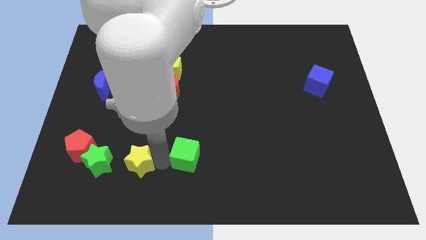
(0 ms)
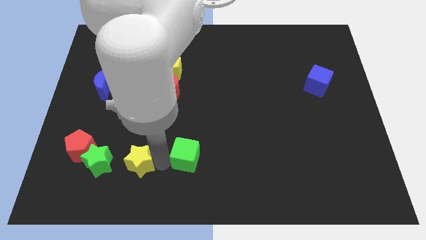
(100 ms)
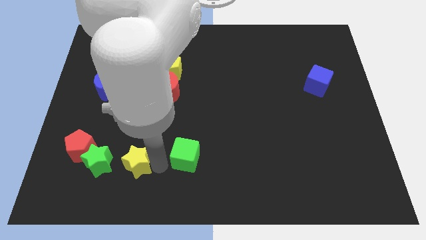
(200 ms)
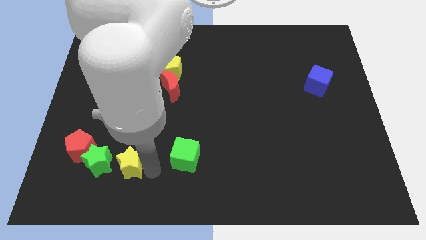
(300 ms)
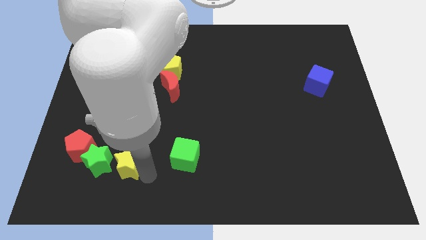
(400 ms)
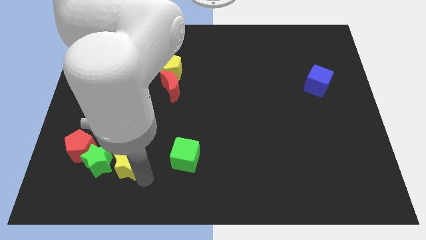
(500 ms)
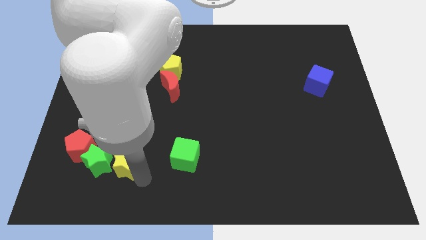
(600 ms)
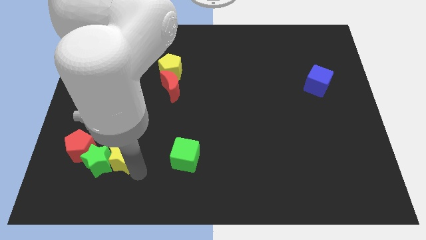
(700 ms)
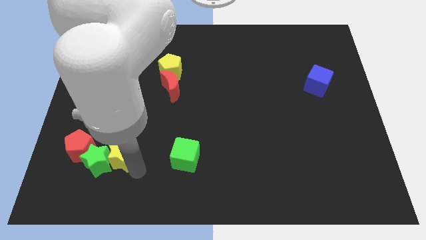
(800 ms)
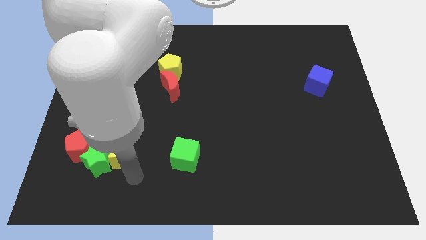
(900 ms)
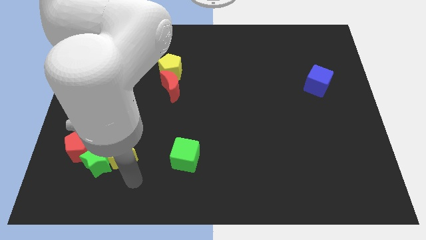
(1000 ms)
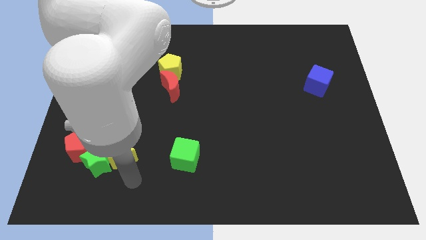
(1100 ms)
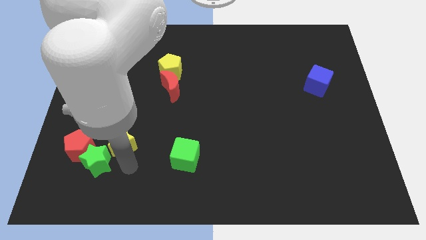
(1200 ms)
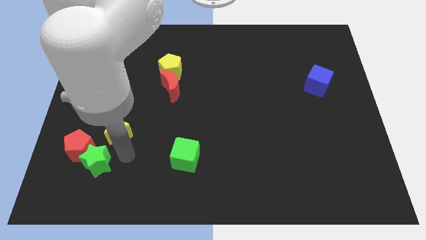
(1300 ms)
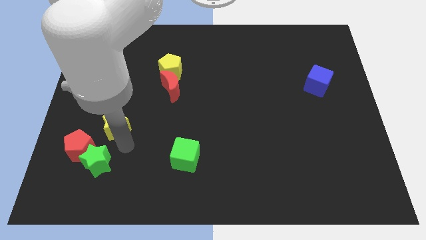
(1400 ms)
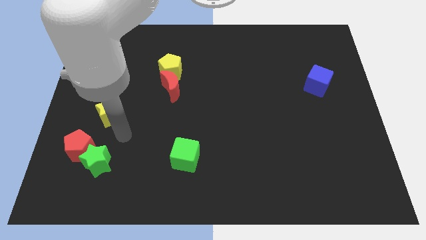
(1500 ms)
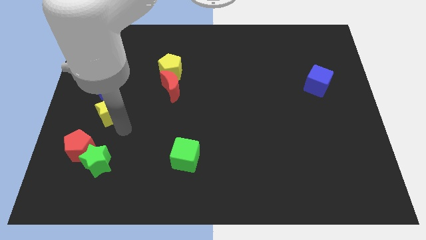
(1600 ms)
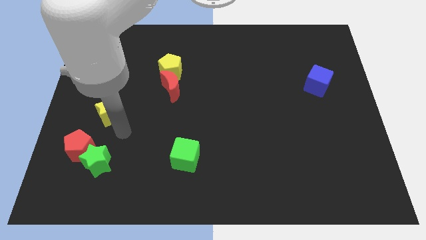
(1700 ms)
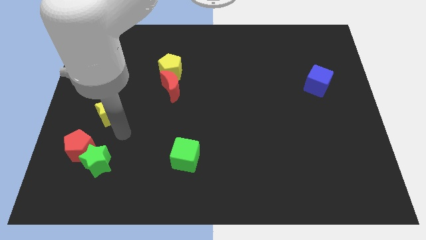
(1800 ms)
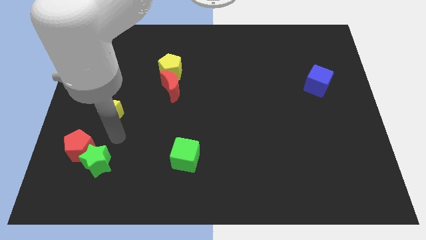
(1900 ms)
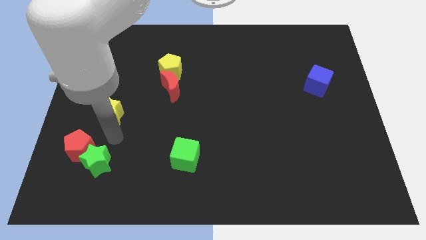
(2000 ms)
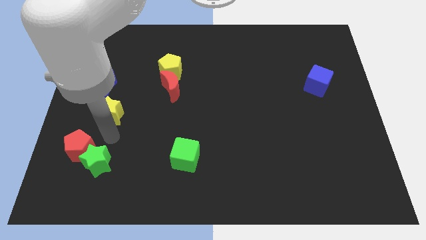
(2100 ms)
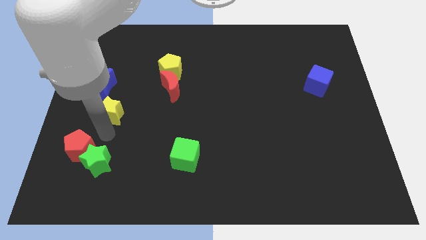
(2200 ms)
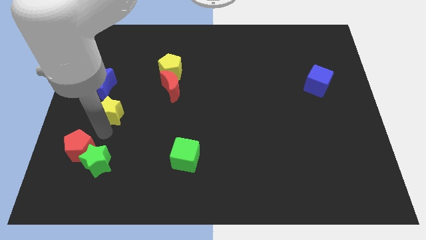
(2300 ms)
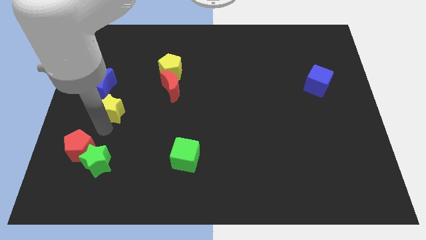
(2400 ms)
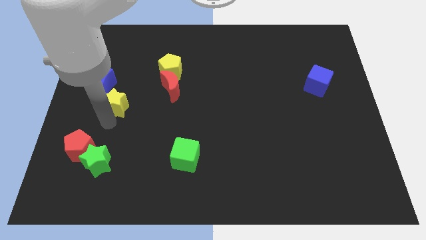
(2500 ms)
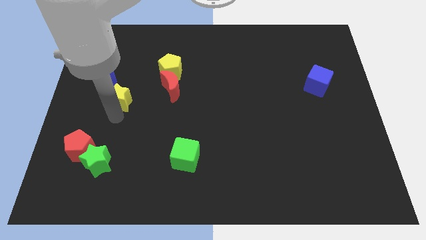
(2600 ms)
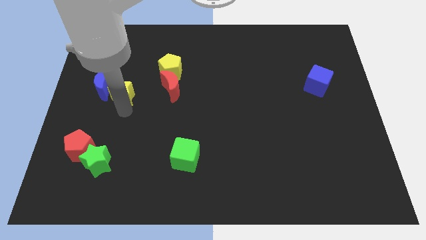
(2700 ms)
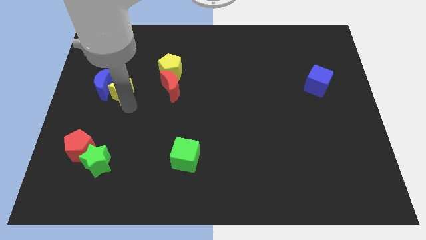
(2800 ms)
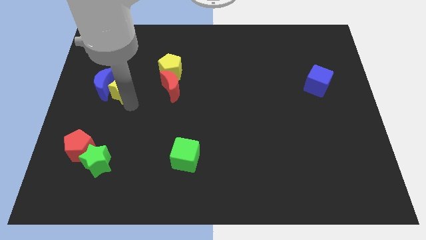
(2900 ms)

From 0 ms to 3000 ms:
drag yellow star to the right of the blue moon

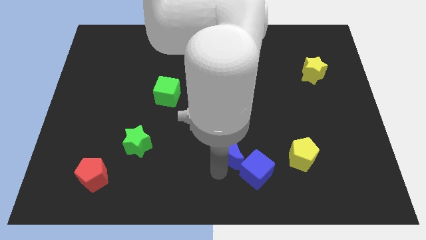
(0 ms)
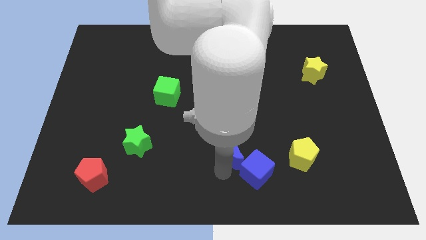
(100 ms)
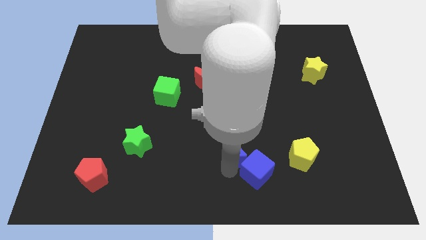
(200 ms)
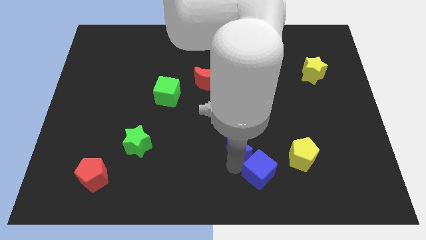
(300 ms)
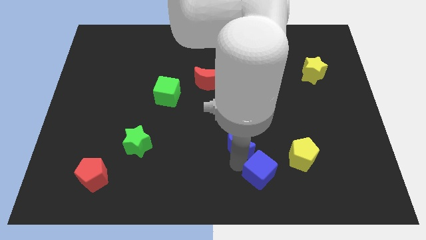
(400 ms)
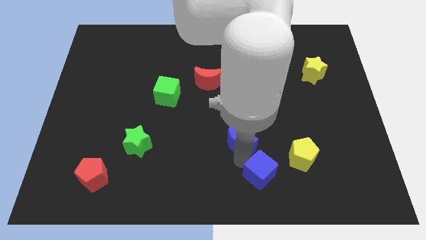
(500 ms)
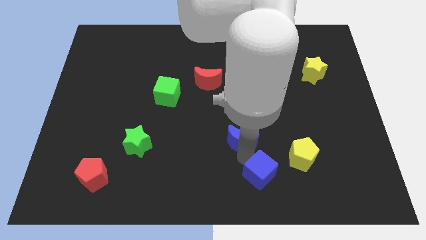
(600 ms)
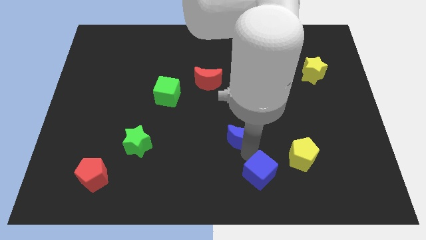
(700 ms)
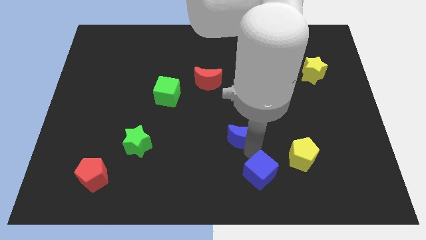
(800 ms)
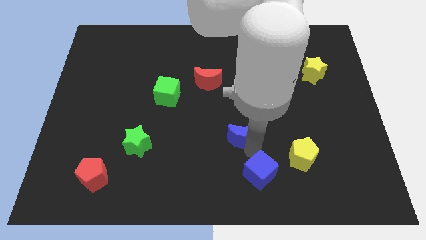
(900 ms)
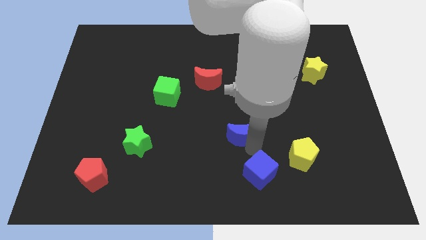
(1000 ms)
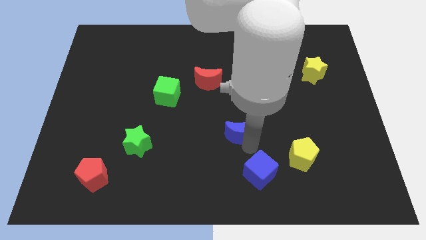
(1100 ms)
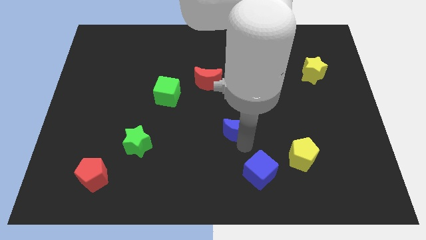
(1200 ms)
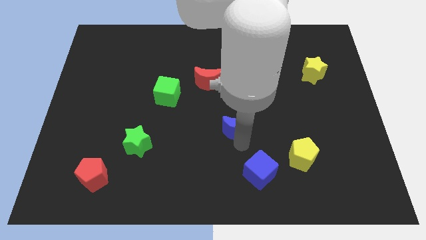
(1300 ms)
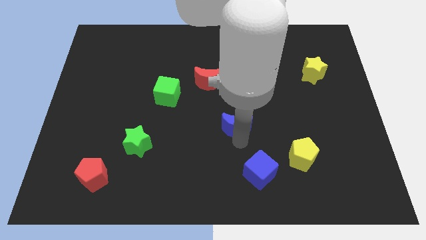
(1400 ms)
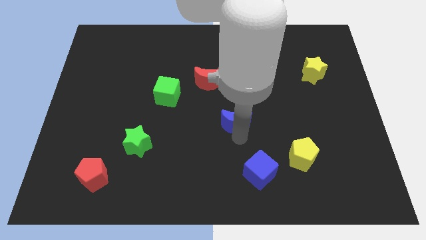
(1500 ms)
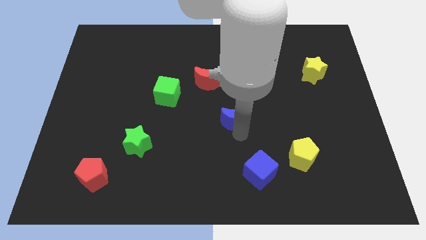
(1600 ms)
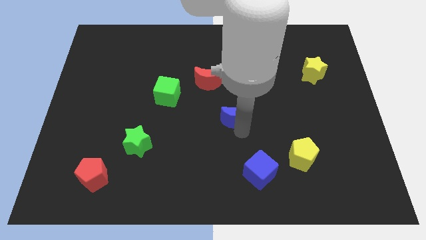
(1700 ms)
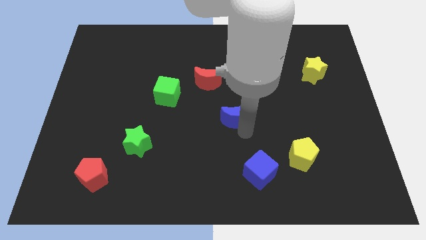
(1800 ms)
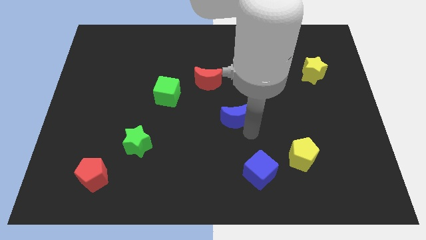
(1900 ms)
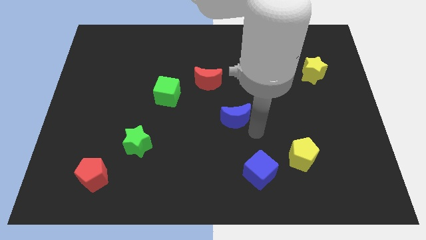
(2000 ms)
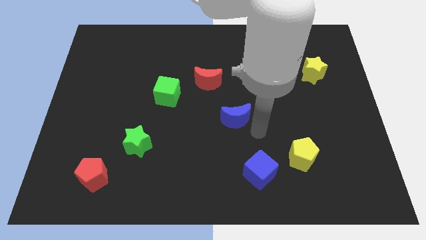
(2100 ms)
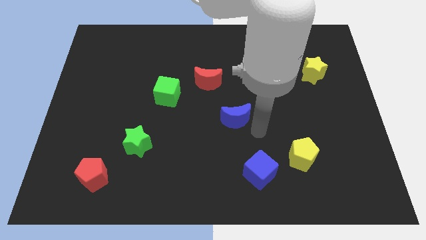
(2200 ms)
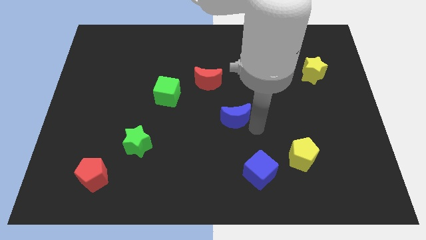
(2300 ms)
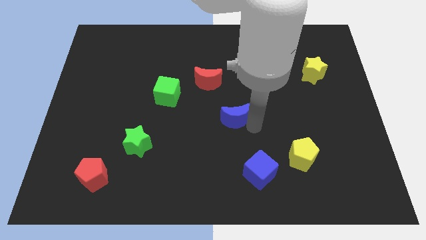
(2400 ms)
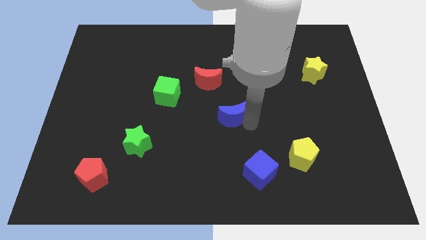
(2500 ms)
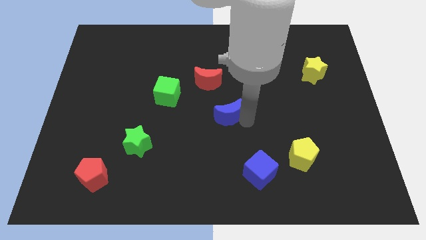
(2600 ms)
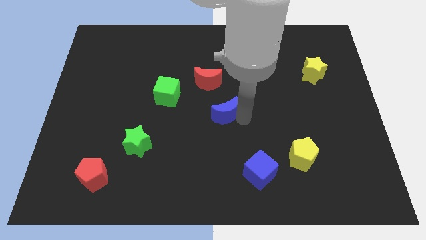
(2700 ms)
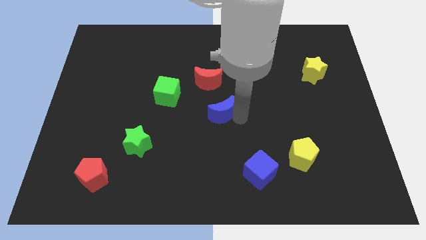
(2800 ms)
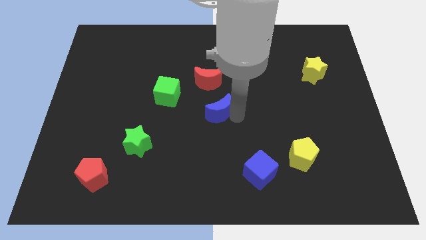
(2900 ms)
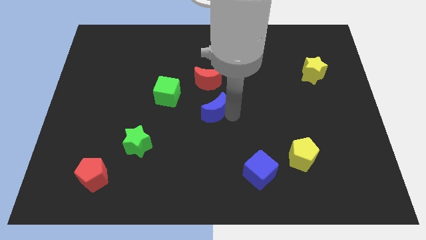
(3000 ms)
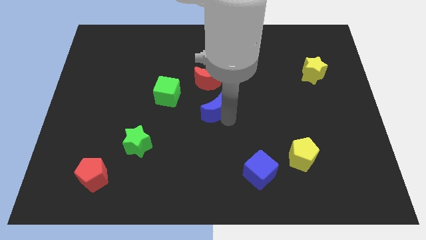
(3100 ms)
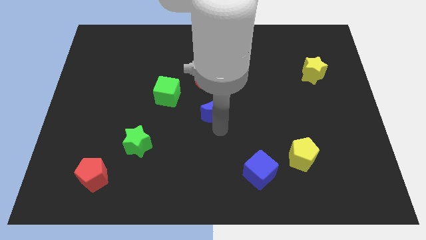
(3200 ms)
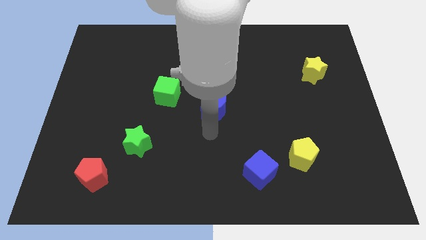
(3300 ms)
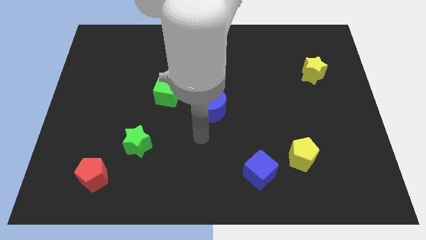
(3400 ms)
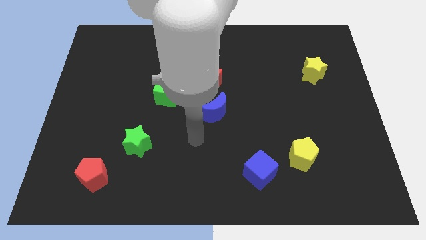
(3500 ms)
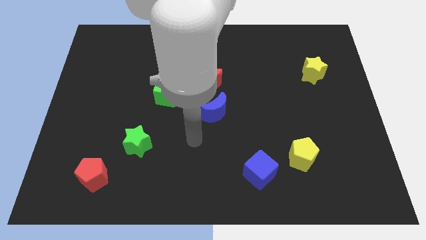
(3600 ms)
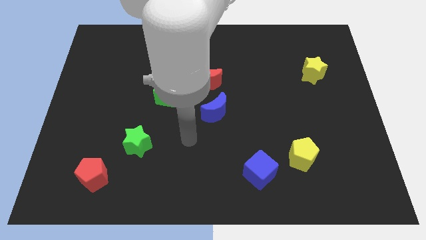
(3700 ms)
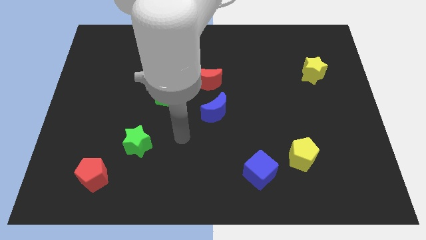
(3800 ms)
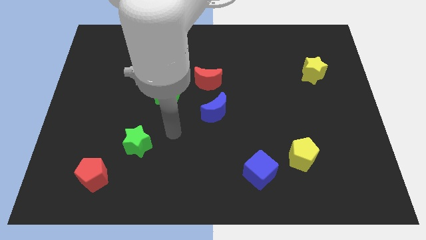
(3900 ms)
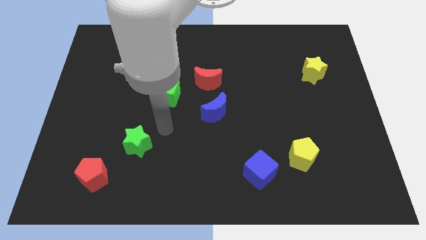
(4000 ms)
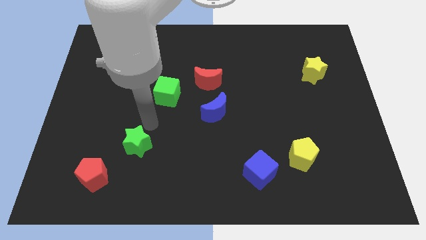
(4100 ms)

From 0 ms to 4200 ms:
place the blue moon below the red moon

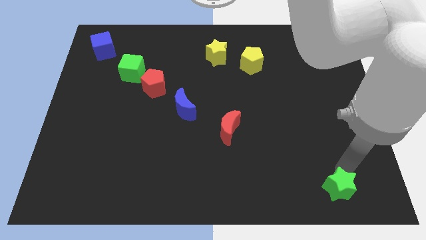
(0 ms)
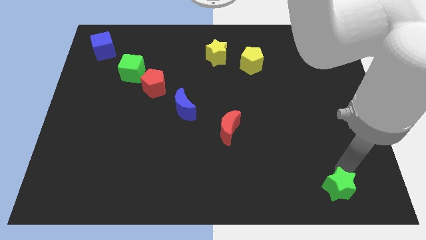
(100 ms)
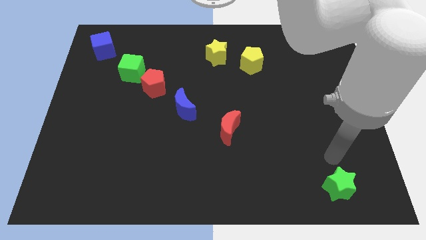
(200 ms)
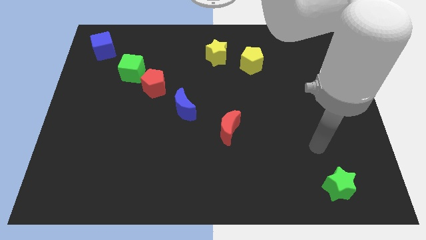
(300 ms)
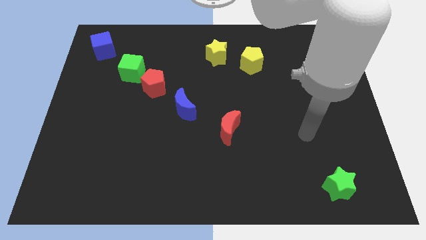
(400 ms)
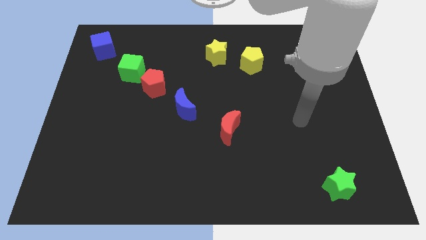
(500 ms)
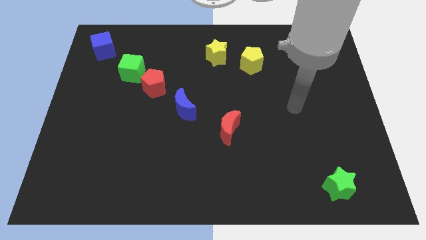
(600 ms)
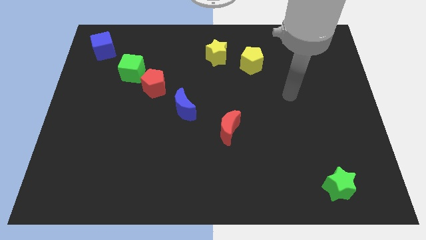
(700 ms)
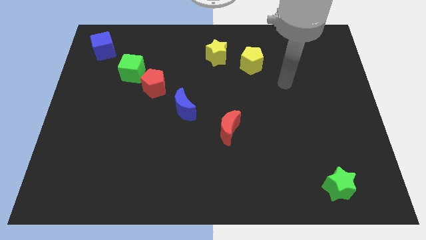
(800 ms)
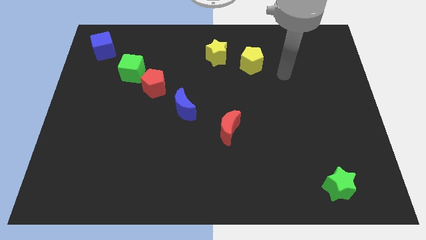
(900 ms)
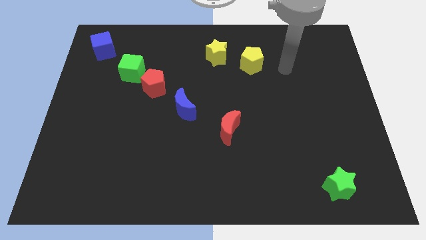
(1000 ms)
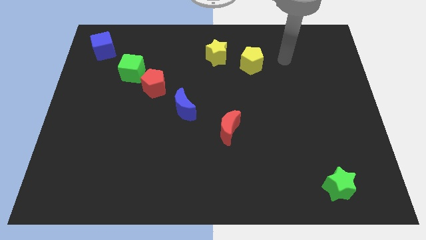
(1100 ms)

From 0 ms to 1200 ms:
go away from the green star

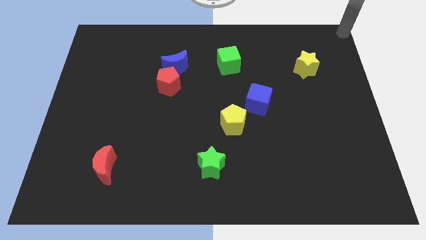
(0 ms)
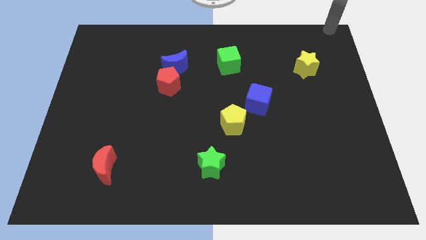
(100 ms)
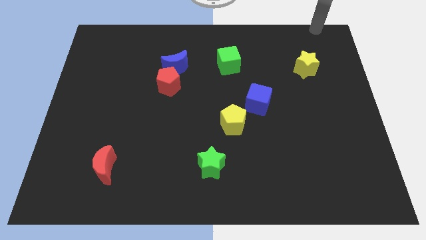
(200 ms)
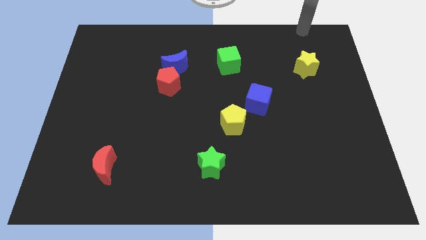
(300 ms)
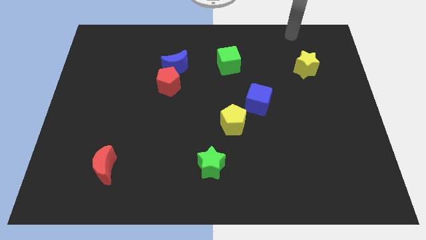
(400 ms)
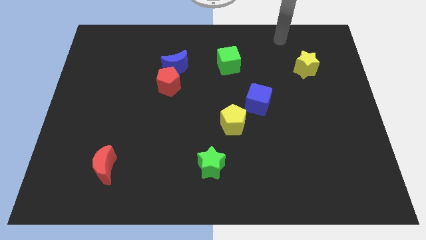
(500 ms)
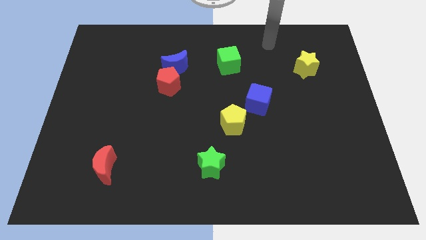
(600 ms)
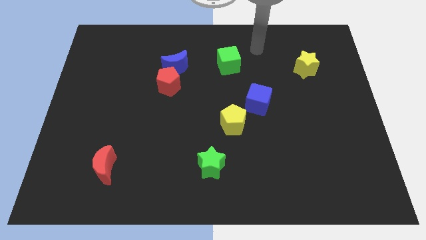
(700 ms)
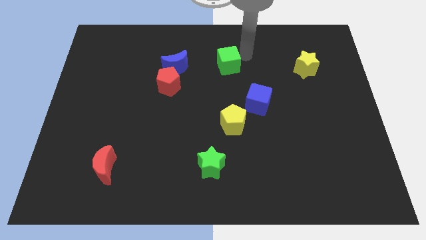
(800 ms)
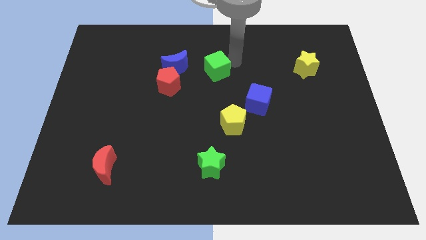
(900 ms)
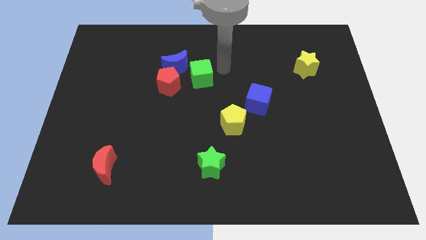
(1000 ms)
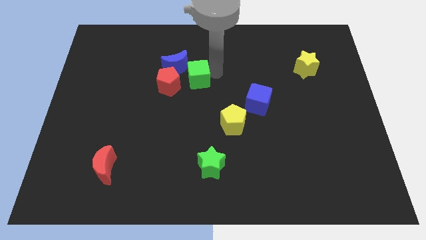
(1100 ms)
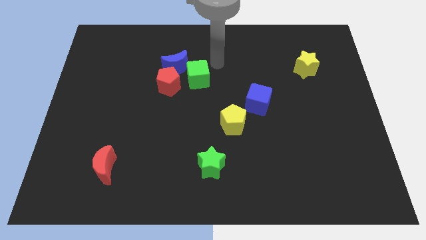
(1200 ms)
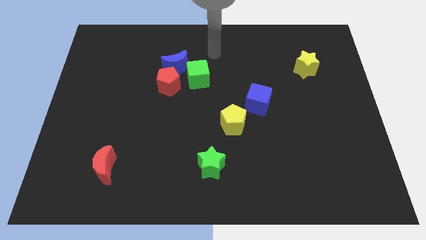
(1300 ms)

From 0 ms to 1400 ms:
place the green cube to the right of the red pentagon
